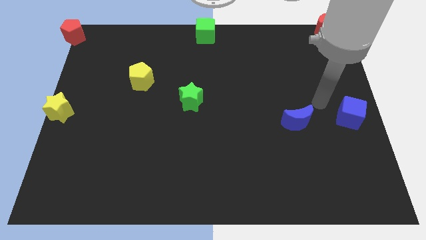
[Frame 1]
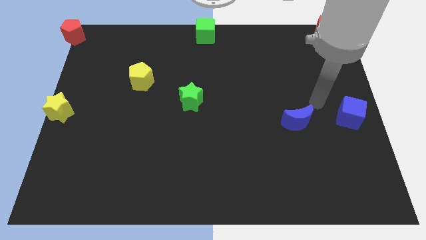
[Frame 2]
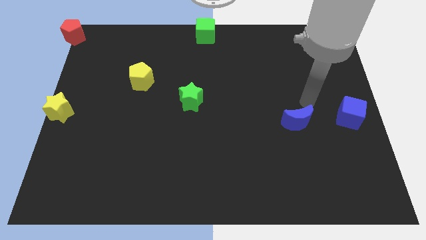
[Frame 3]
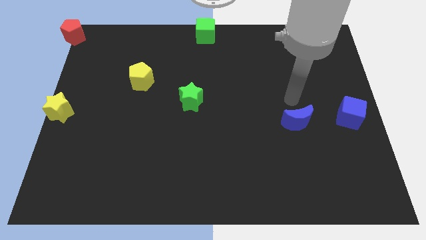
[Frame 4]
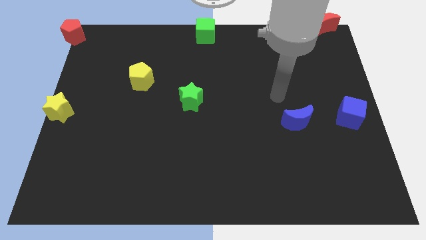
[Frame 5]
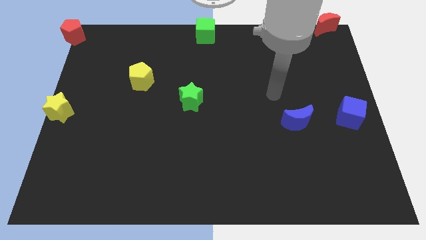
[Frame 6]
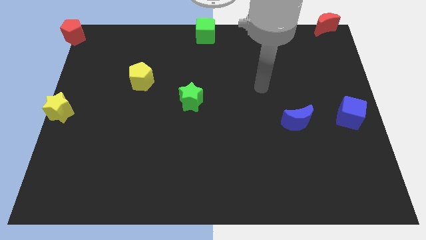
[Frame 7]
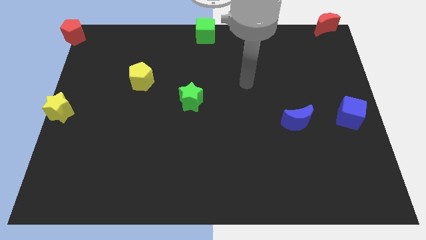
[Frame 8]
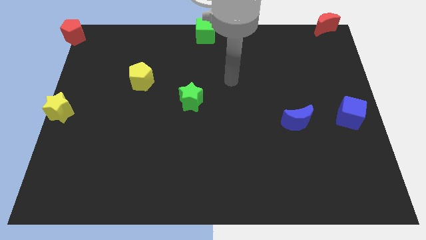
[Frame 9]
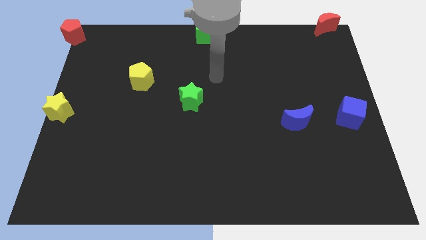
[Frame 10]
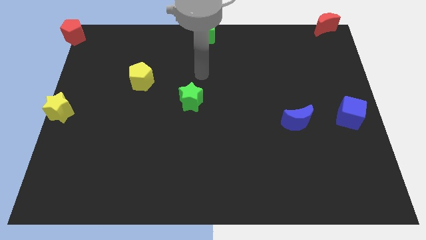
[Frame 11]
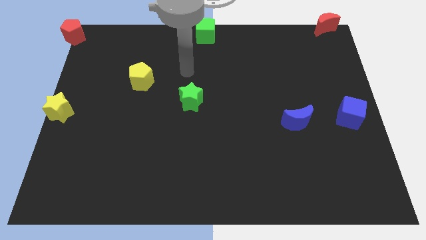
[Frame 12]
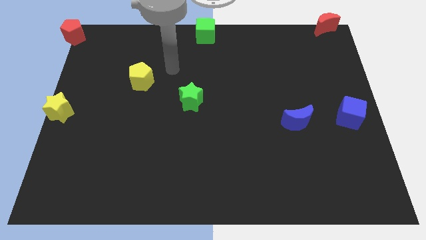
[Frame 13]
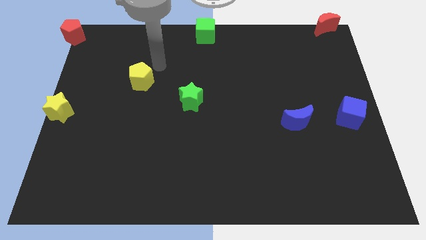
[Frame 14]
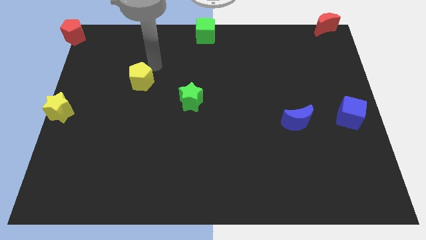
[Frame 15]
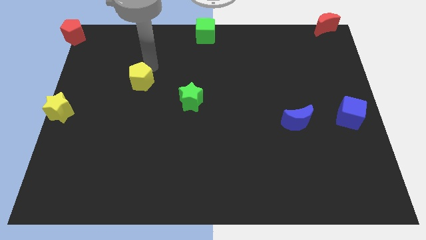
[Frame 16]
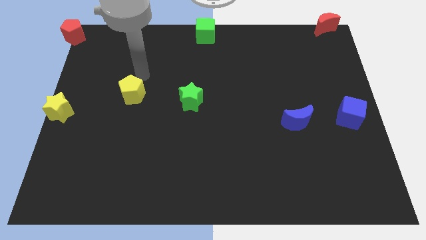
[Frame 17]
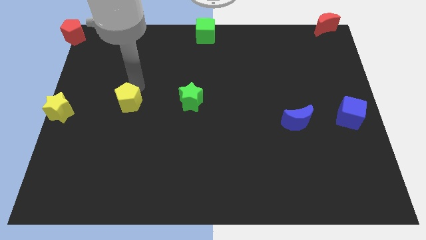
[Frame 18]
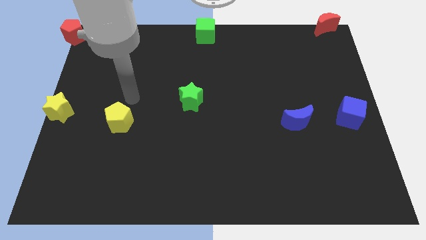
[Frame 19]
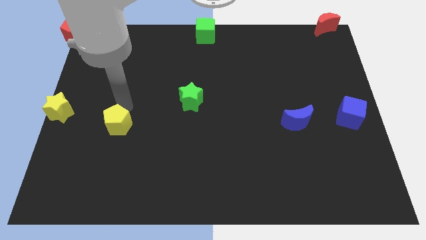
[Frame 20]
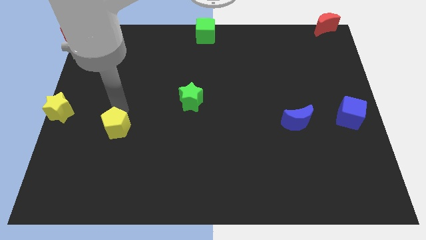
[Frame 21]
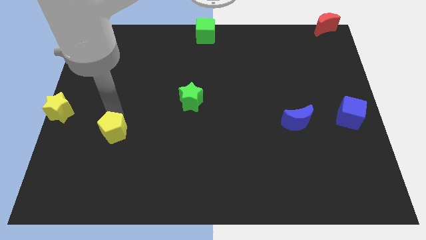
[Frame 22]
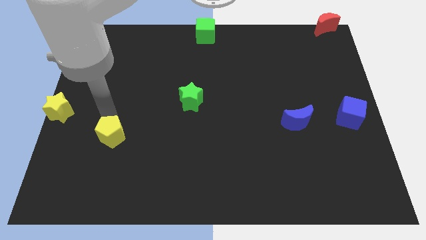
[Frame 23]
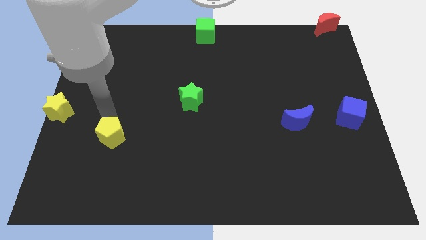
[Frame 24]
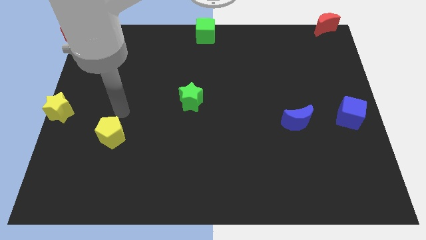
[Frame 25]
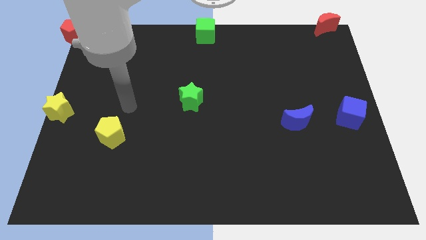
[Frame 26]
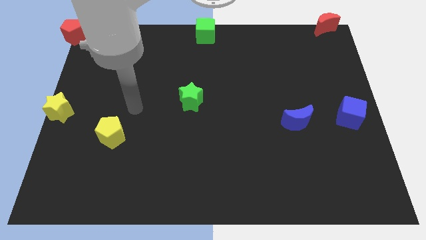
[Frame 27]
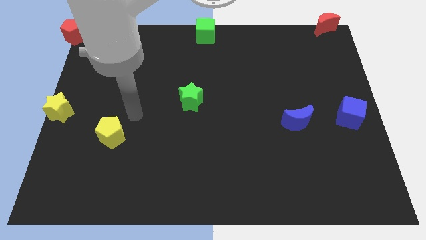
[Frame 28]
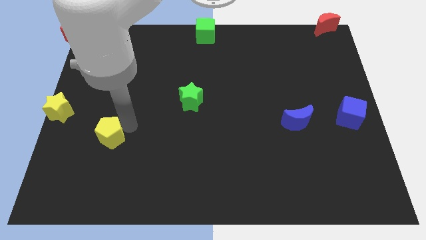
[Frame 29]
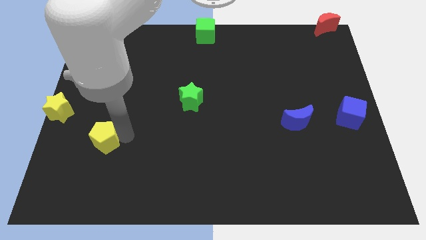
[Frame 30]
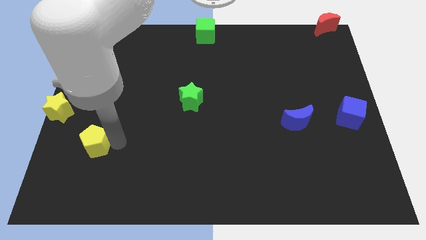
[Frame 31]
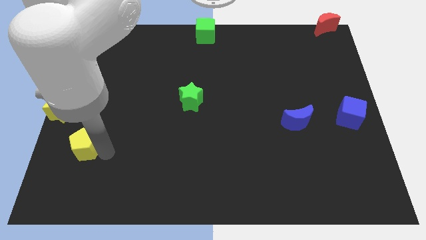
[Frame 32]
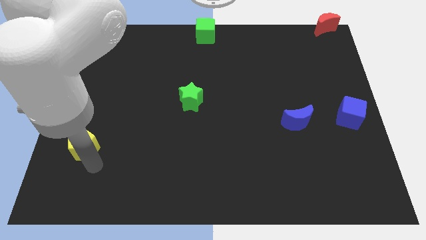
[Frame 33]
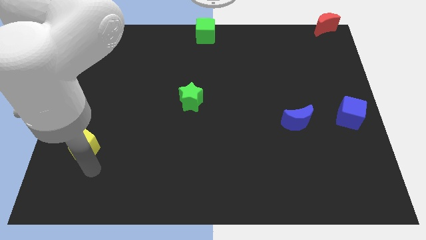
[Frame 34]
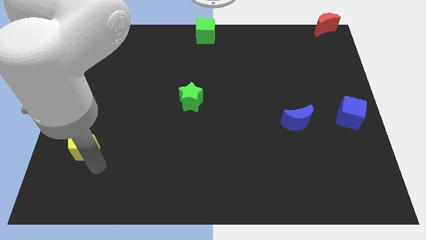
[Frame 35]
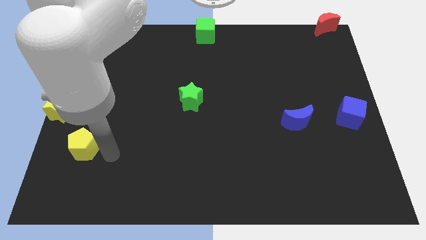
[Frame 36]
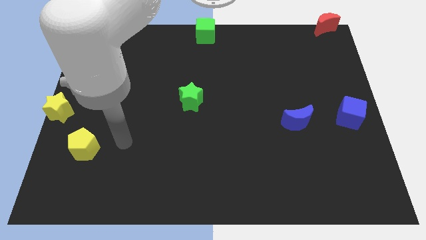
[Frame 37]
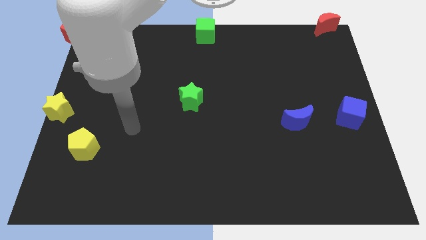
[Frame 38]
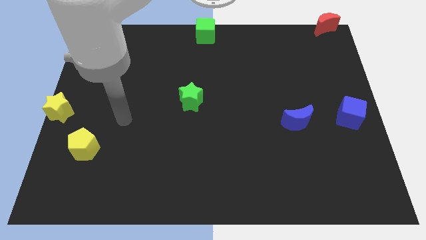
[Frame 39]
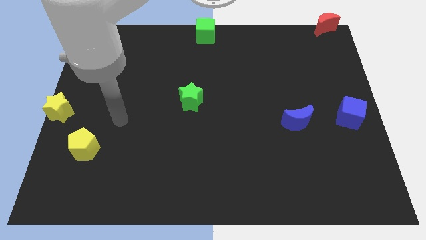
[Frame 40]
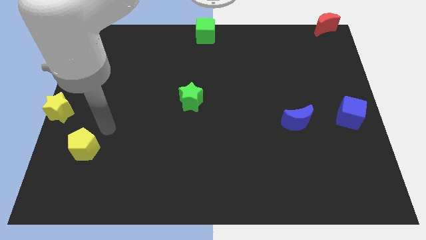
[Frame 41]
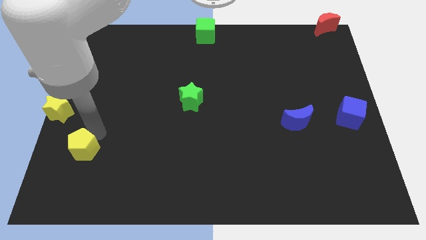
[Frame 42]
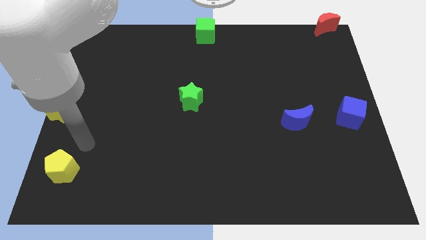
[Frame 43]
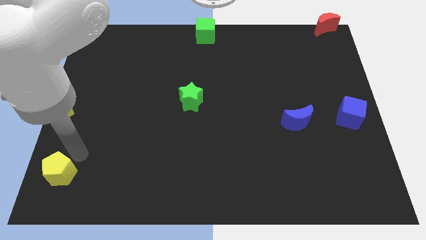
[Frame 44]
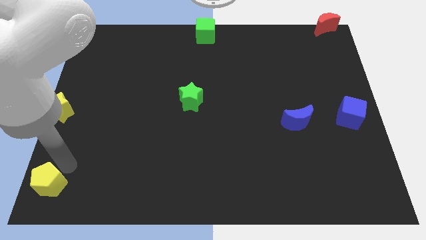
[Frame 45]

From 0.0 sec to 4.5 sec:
move the yellow pentagon to the bottom left of the board

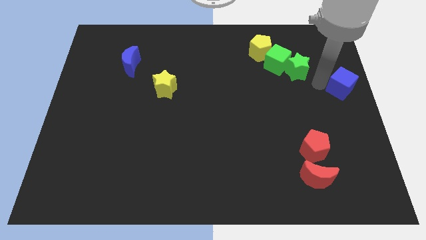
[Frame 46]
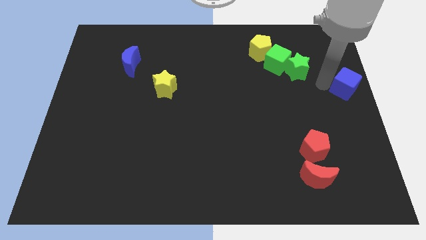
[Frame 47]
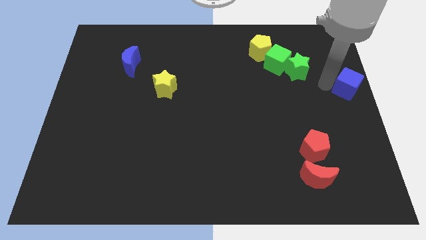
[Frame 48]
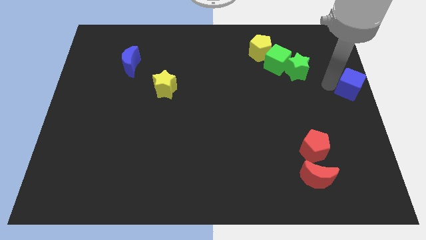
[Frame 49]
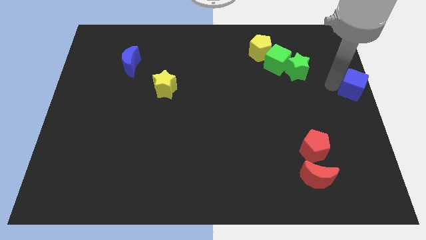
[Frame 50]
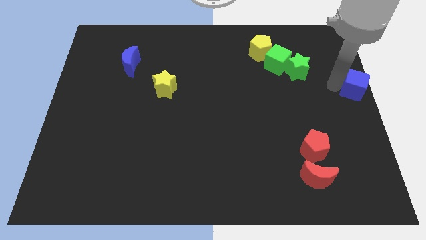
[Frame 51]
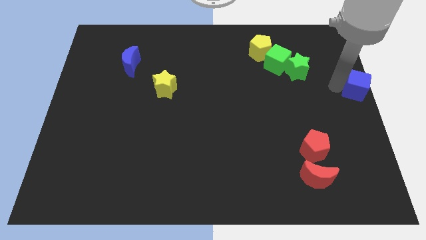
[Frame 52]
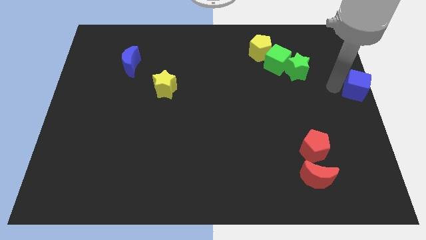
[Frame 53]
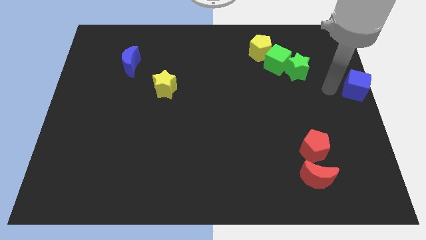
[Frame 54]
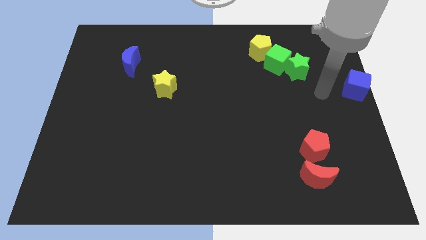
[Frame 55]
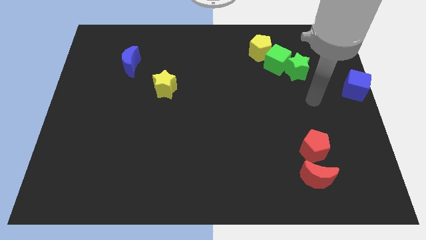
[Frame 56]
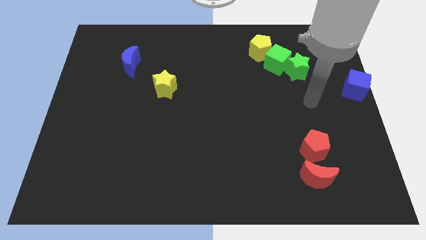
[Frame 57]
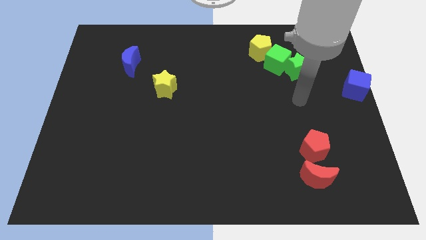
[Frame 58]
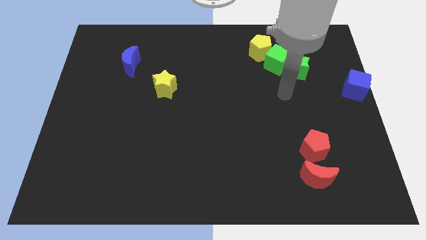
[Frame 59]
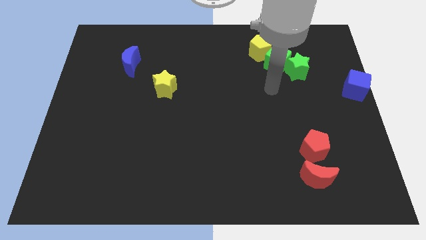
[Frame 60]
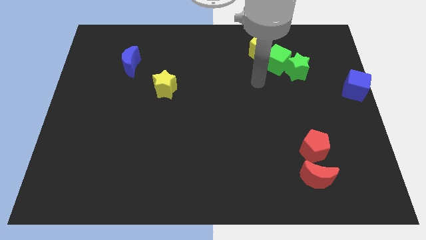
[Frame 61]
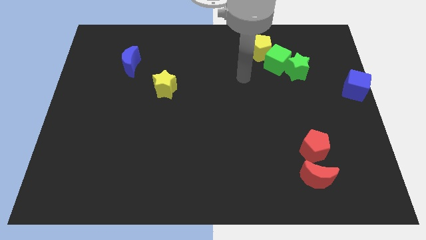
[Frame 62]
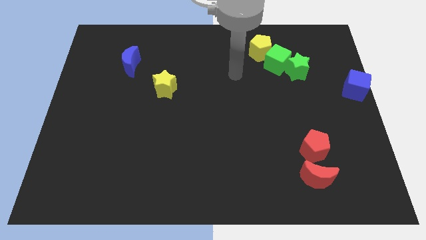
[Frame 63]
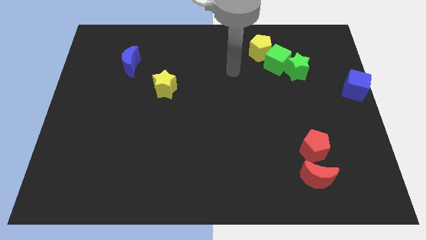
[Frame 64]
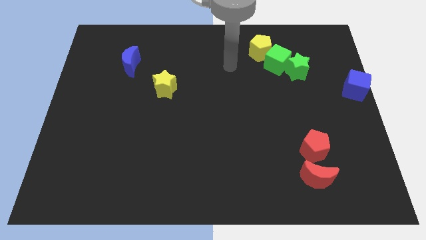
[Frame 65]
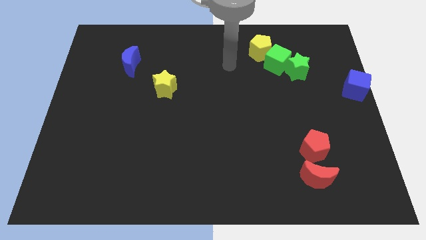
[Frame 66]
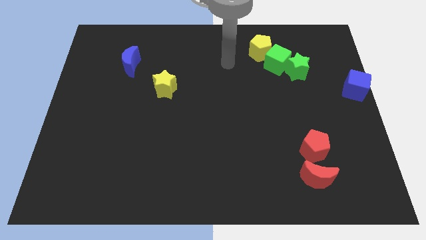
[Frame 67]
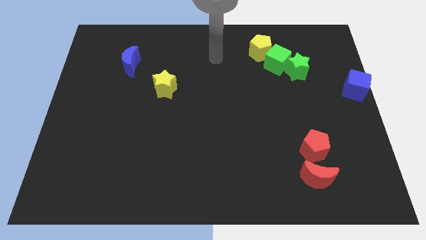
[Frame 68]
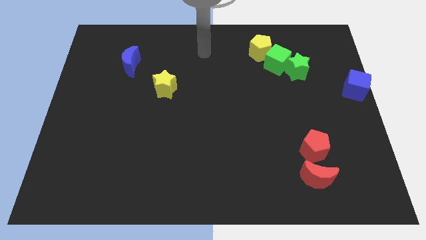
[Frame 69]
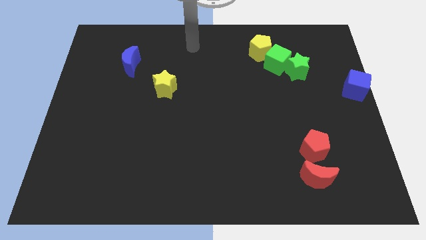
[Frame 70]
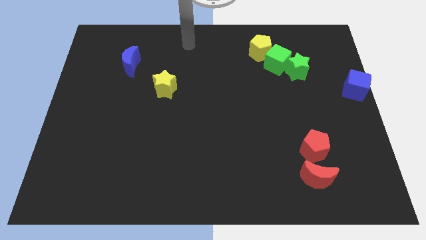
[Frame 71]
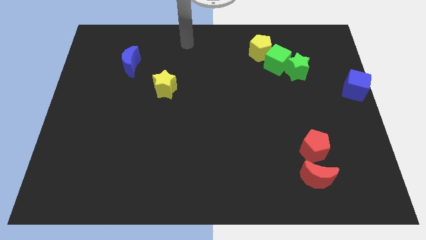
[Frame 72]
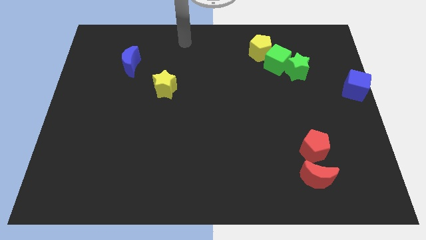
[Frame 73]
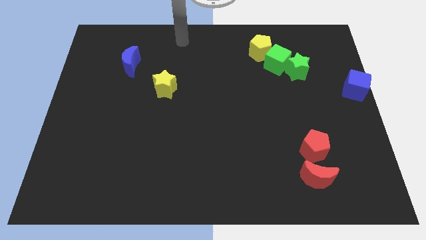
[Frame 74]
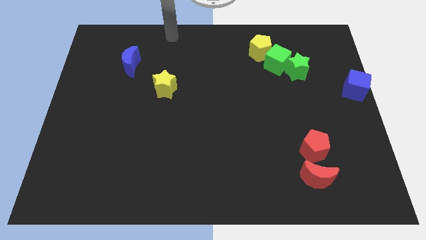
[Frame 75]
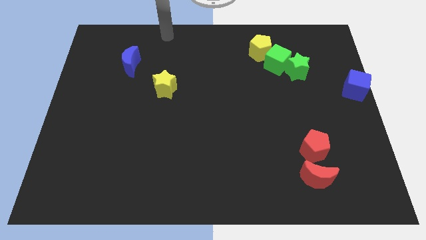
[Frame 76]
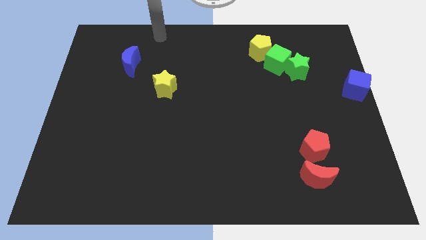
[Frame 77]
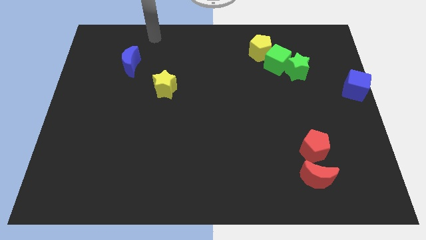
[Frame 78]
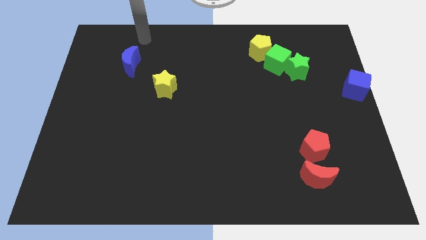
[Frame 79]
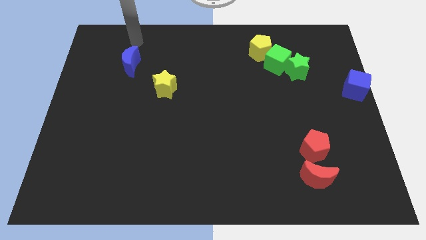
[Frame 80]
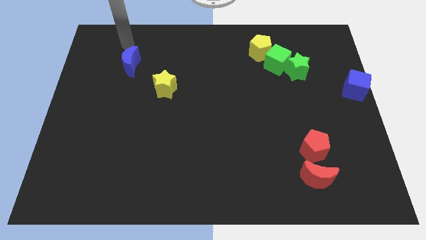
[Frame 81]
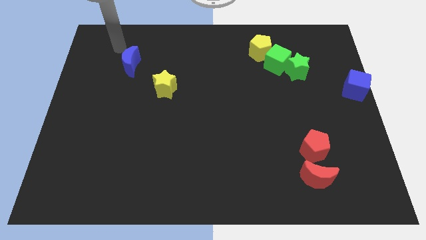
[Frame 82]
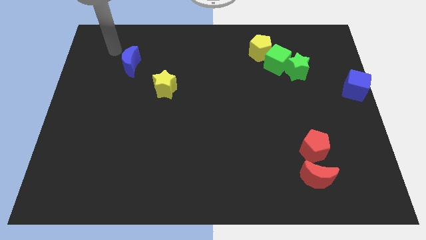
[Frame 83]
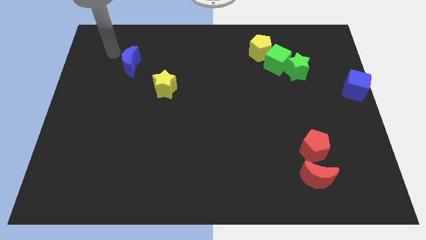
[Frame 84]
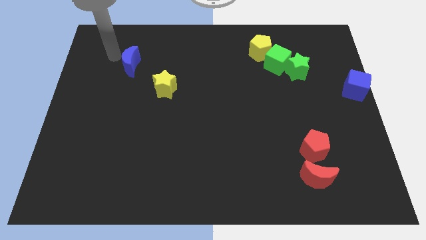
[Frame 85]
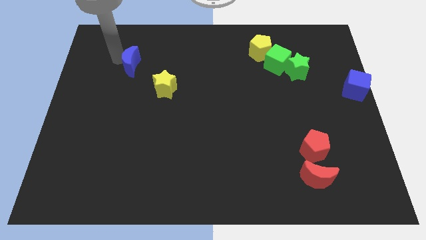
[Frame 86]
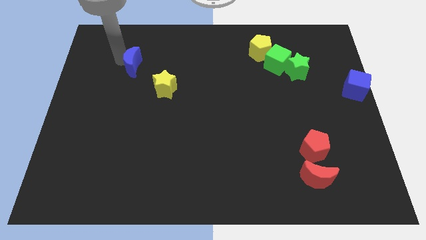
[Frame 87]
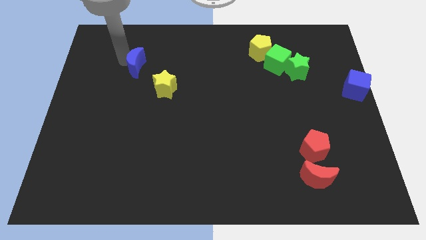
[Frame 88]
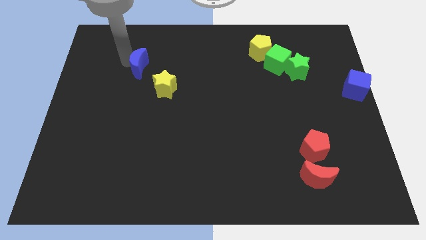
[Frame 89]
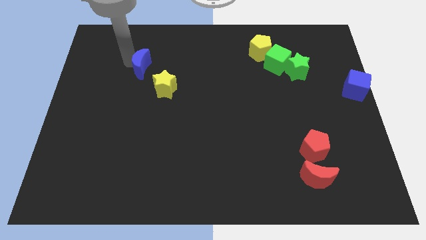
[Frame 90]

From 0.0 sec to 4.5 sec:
slightly push the blue crescent towards the right of the board

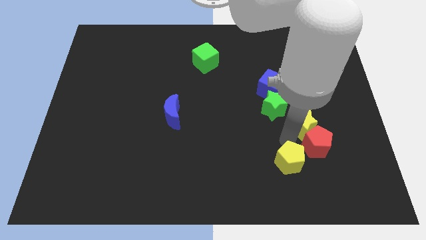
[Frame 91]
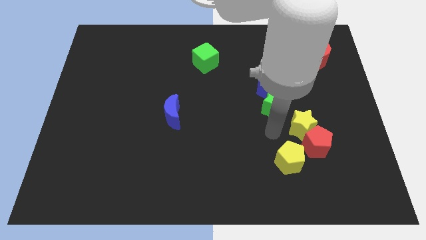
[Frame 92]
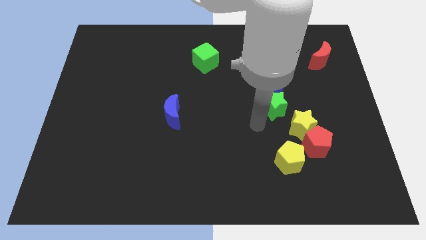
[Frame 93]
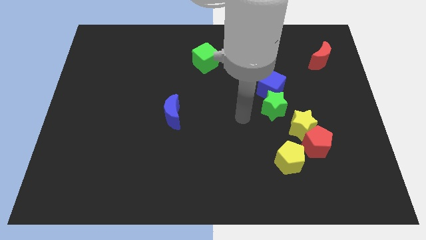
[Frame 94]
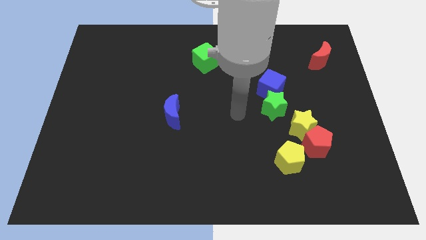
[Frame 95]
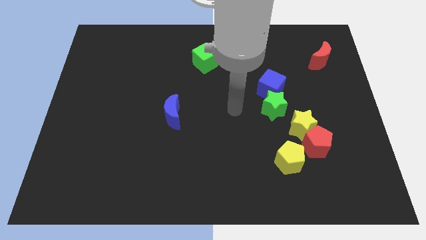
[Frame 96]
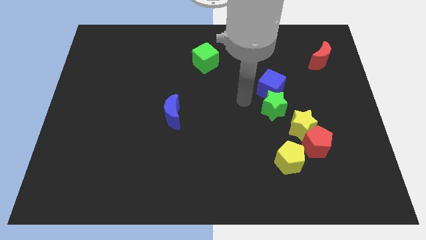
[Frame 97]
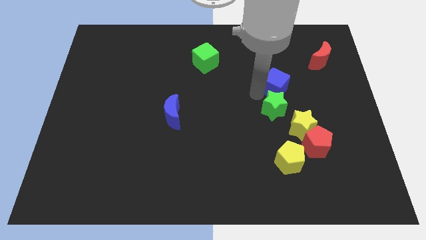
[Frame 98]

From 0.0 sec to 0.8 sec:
slightly push the blue cube towards the right side of the board
